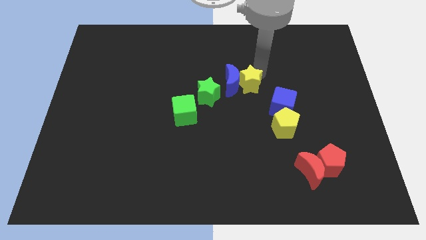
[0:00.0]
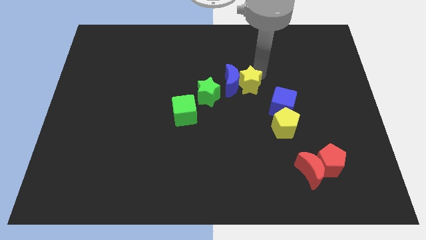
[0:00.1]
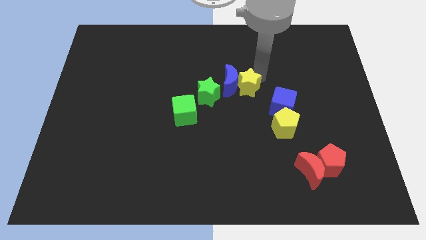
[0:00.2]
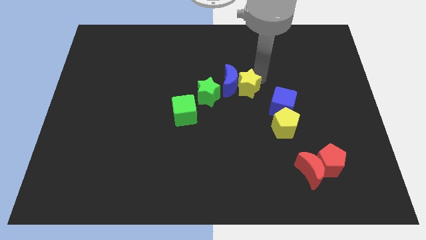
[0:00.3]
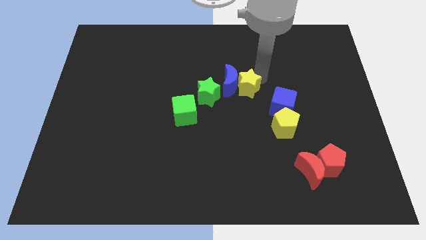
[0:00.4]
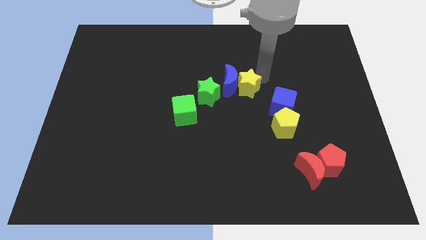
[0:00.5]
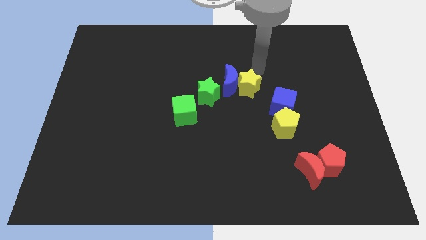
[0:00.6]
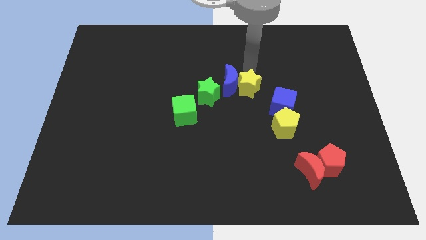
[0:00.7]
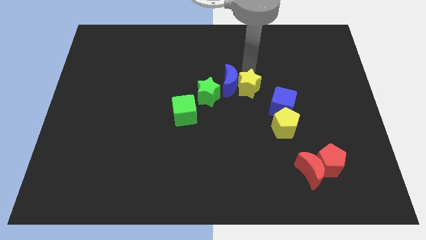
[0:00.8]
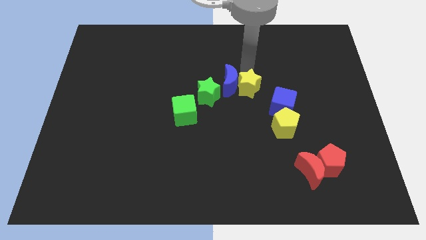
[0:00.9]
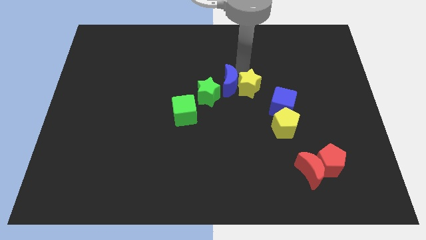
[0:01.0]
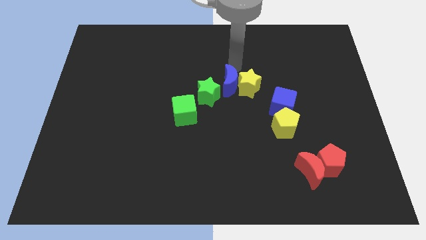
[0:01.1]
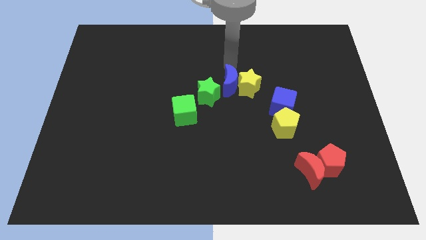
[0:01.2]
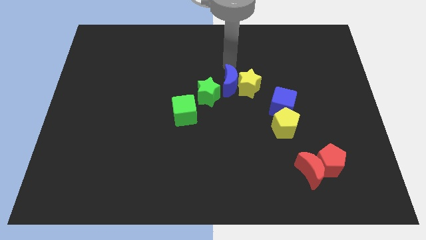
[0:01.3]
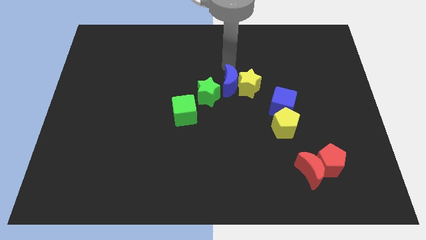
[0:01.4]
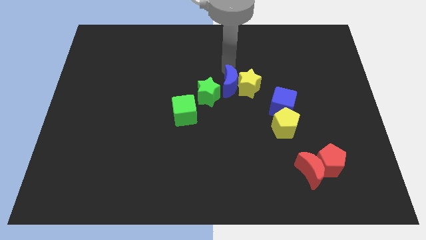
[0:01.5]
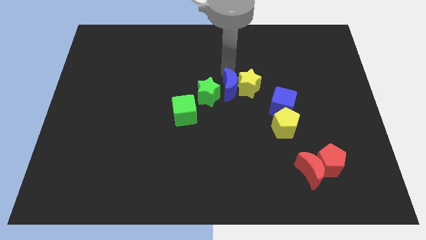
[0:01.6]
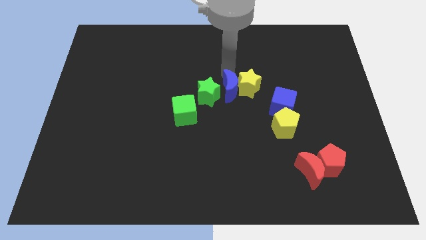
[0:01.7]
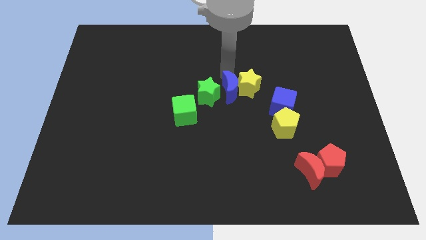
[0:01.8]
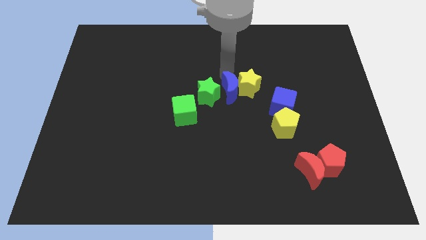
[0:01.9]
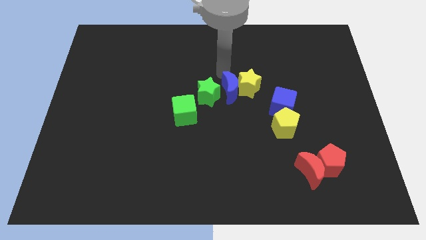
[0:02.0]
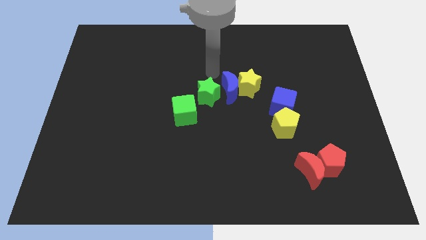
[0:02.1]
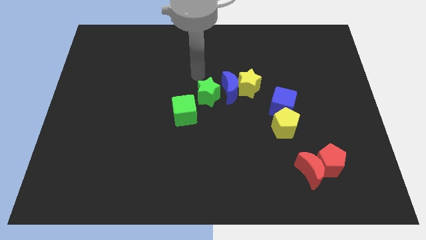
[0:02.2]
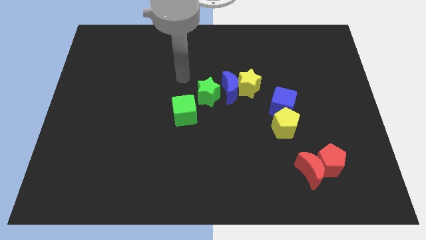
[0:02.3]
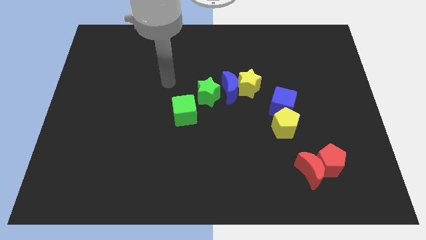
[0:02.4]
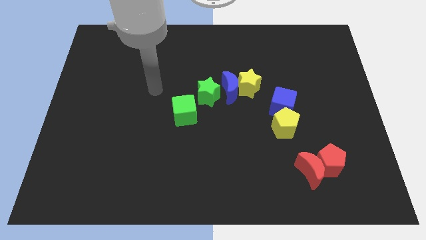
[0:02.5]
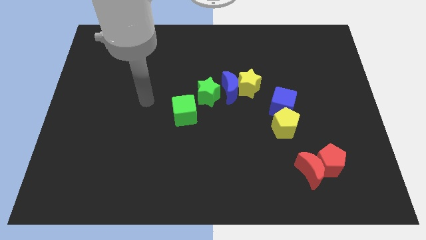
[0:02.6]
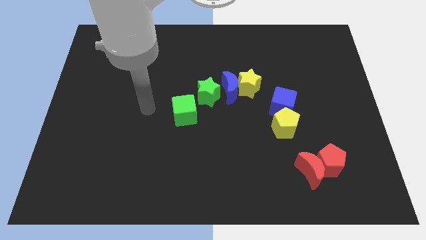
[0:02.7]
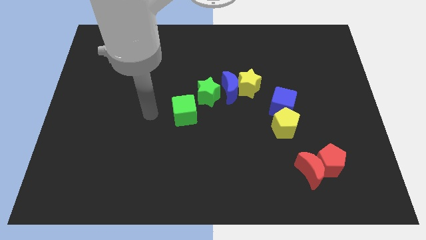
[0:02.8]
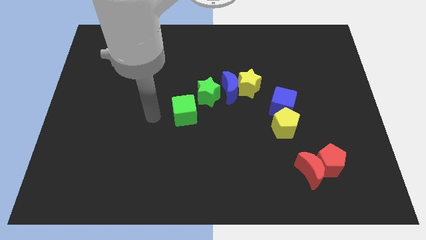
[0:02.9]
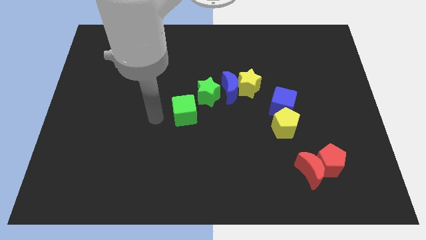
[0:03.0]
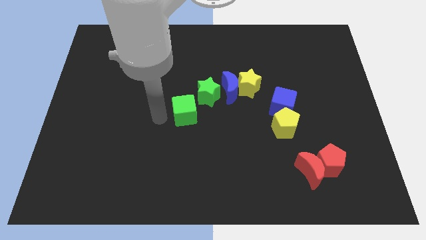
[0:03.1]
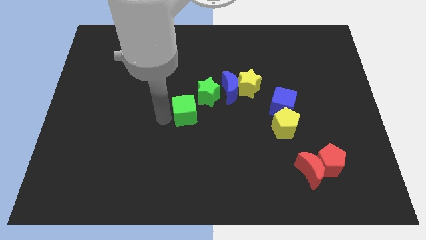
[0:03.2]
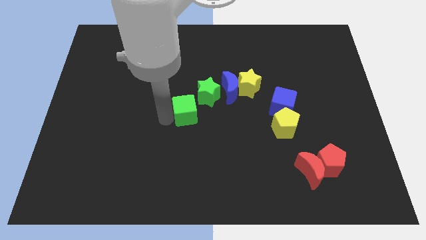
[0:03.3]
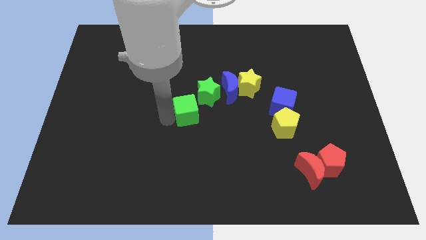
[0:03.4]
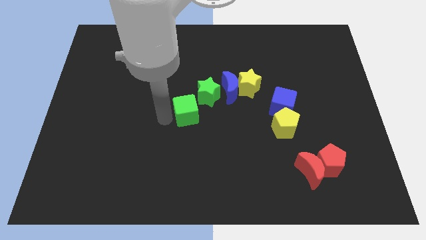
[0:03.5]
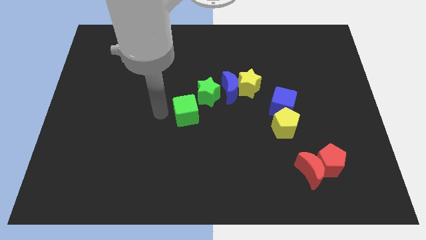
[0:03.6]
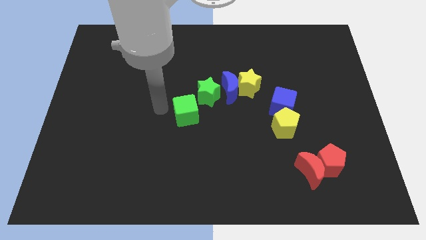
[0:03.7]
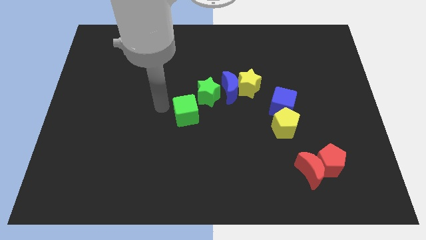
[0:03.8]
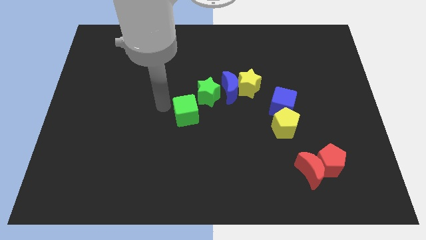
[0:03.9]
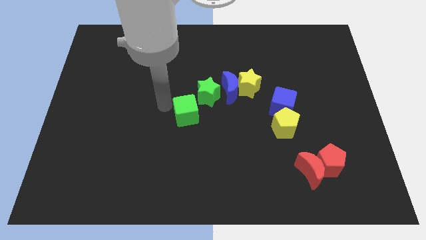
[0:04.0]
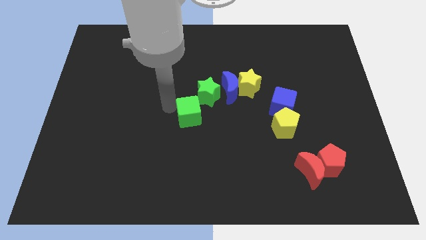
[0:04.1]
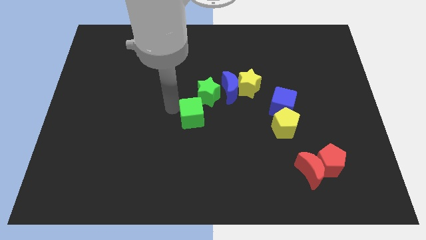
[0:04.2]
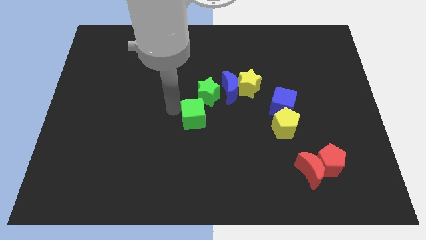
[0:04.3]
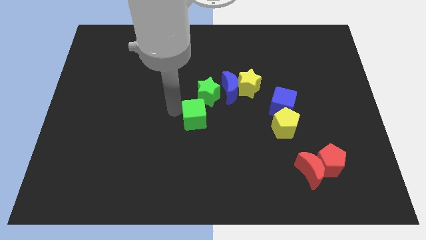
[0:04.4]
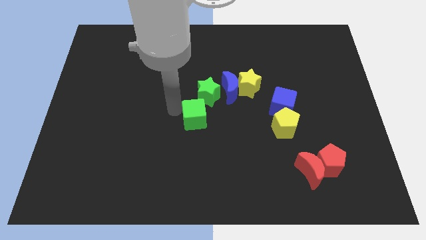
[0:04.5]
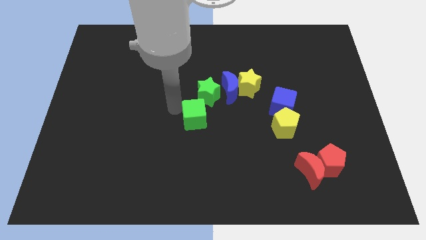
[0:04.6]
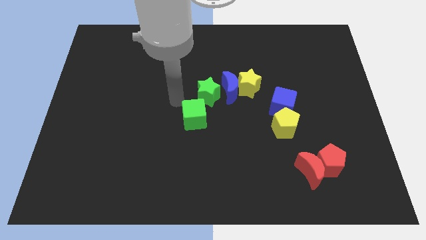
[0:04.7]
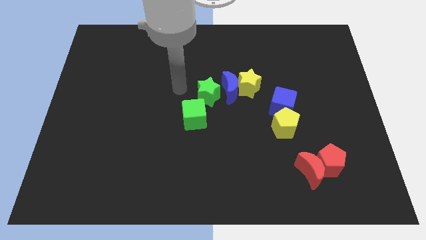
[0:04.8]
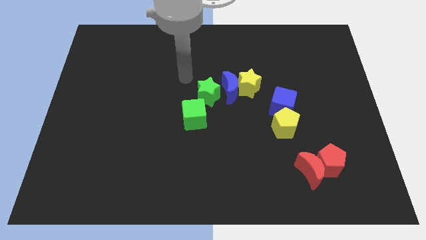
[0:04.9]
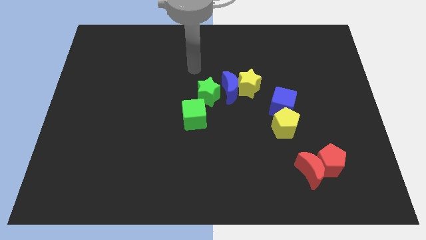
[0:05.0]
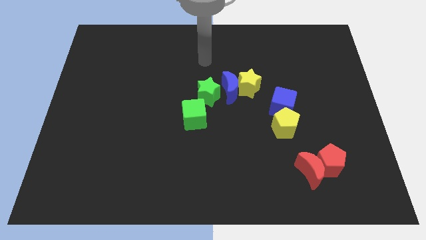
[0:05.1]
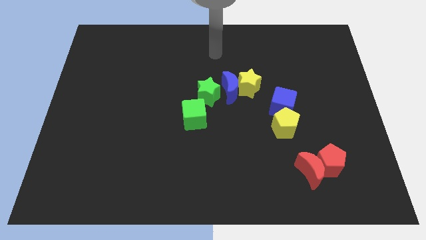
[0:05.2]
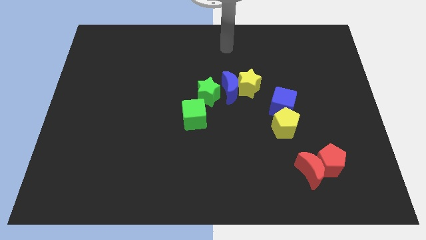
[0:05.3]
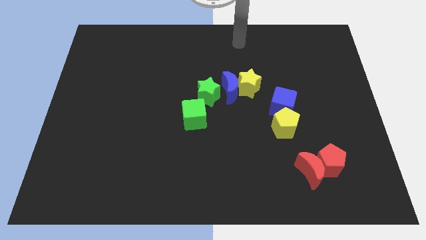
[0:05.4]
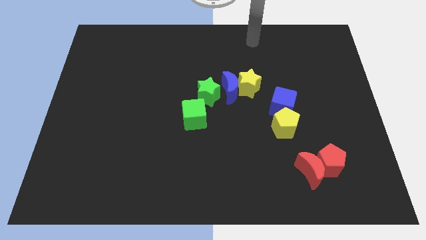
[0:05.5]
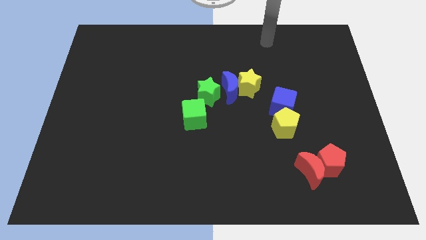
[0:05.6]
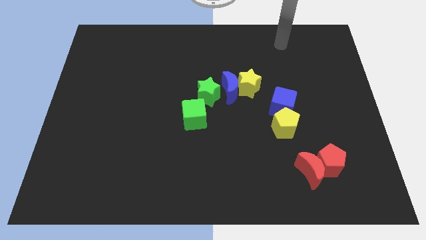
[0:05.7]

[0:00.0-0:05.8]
push the group of green and yellow star blue moon and green cube to the center

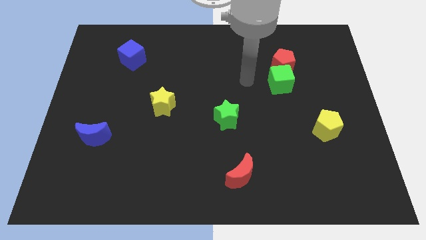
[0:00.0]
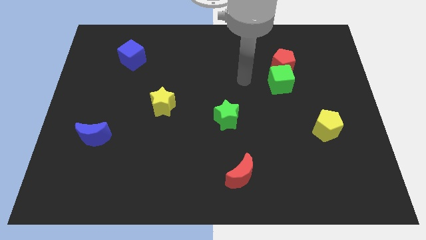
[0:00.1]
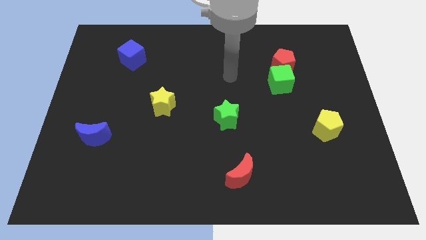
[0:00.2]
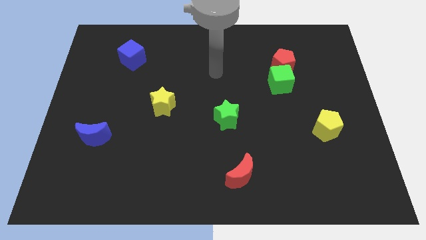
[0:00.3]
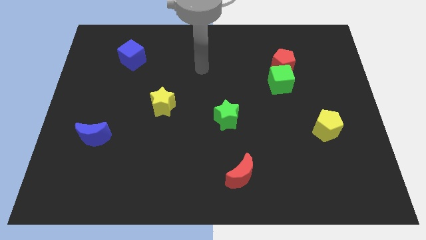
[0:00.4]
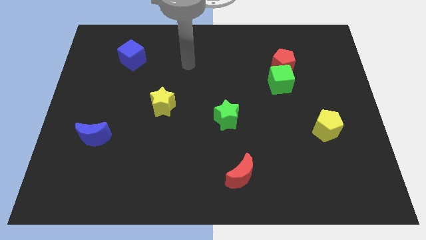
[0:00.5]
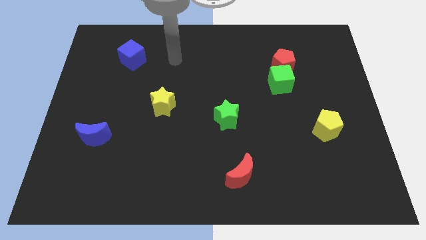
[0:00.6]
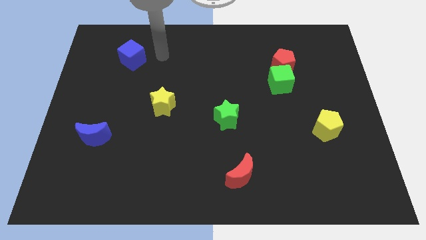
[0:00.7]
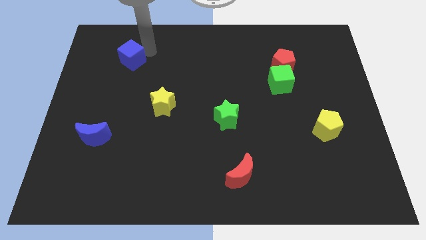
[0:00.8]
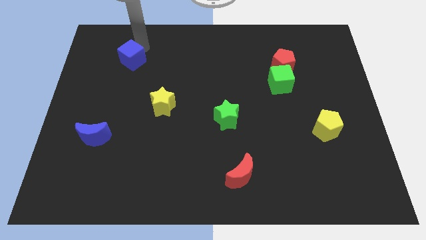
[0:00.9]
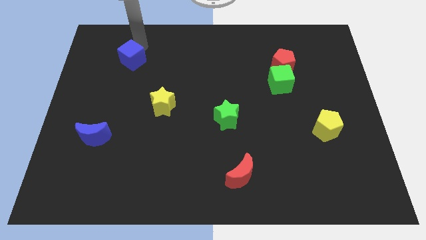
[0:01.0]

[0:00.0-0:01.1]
touch the blue cube

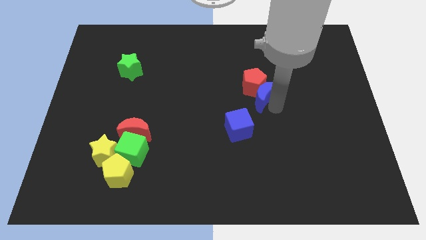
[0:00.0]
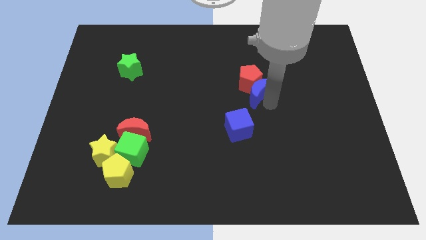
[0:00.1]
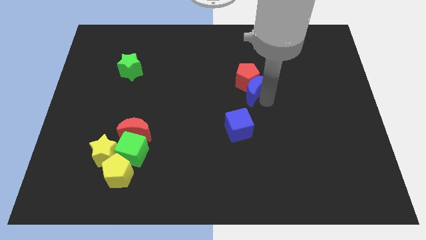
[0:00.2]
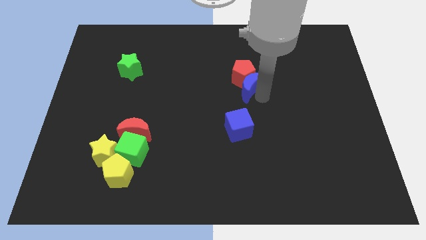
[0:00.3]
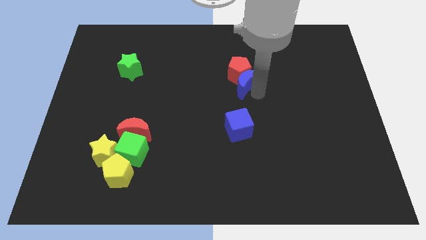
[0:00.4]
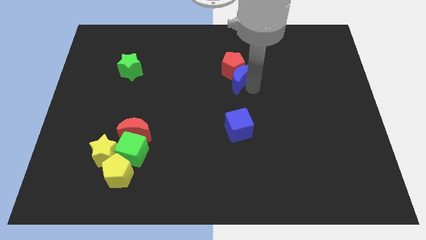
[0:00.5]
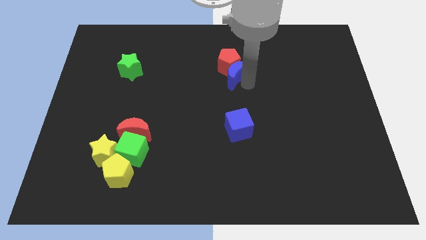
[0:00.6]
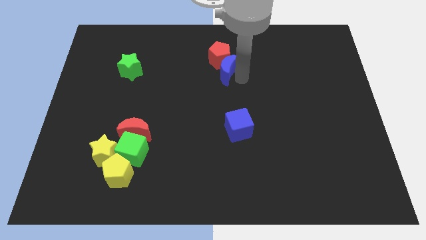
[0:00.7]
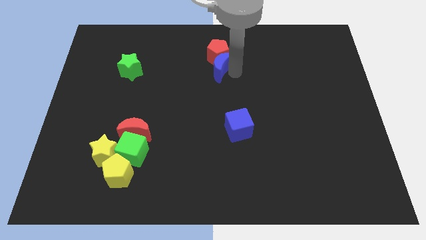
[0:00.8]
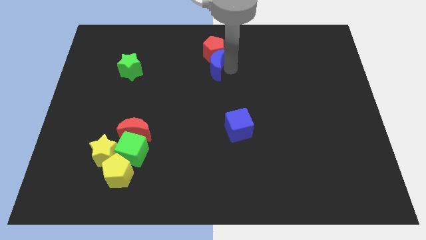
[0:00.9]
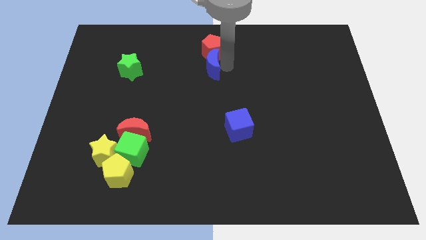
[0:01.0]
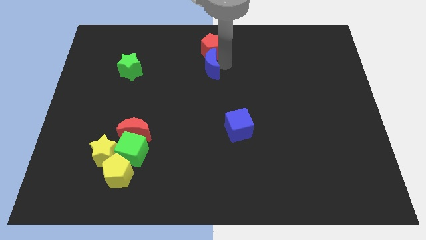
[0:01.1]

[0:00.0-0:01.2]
drag the red pentagon and the blue moon towards the top center

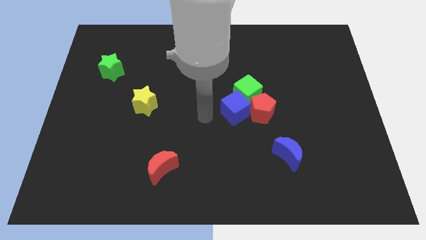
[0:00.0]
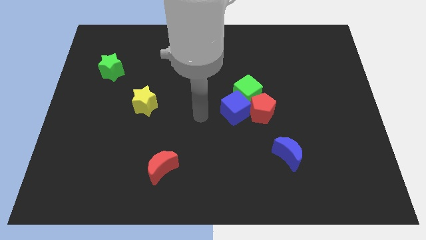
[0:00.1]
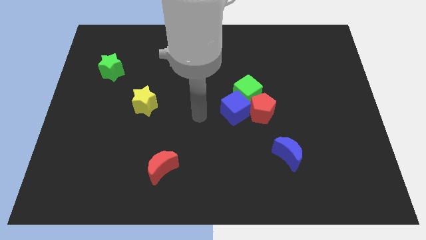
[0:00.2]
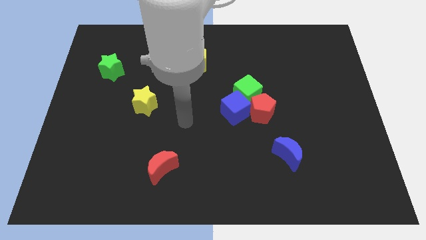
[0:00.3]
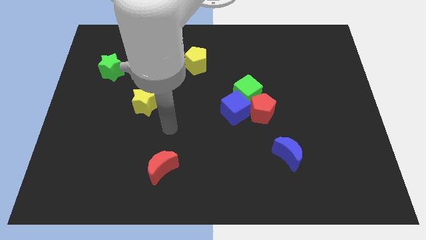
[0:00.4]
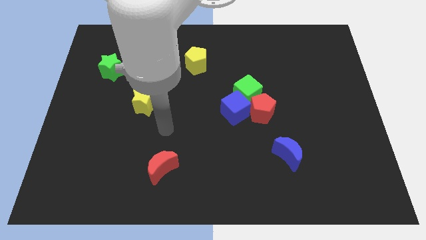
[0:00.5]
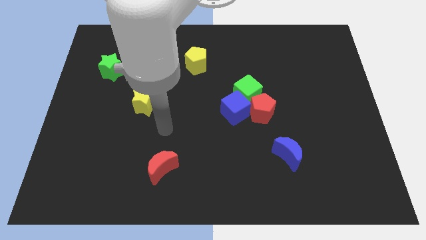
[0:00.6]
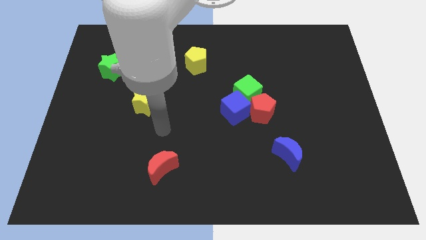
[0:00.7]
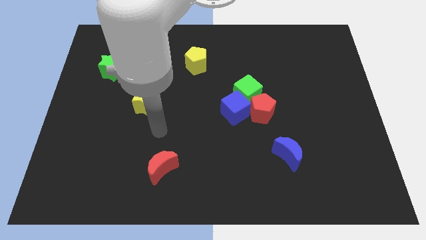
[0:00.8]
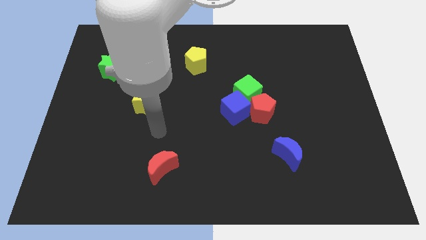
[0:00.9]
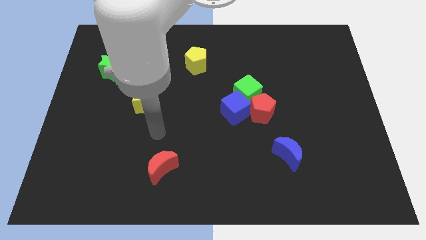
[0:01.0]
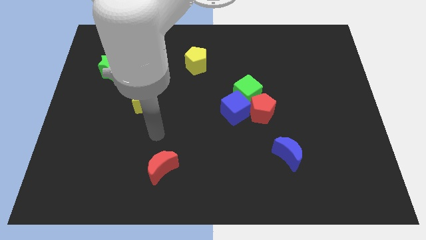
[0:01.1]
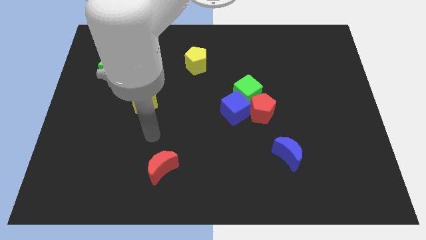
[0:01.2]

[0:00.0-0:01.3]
place your hand in between yellow star and red crescent
